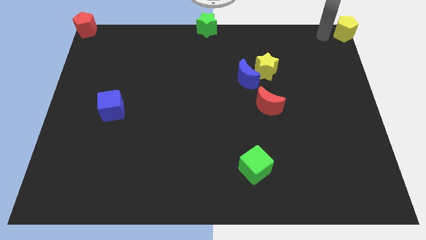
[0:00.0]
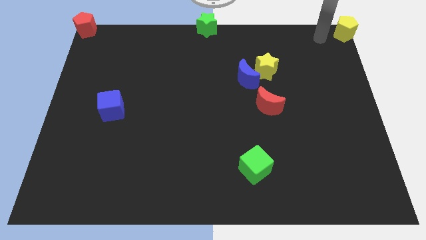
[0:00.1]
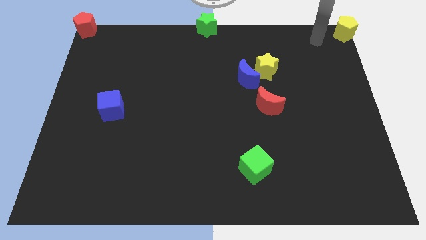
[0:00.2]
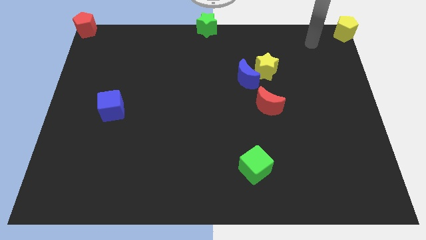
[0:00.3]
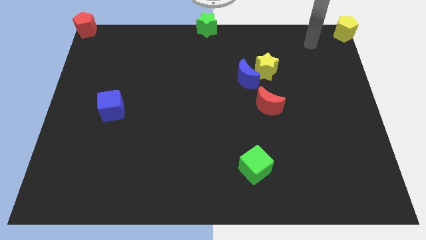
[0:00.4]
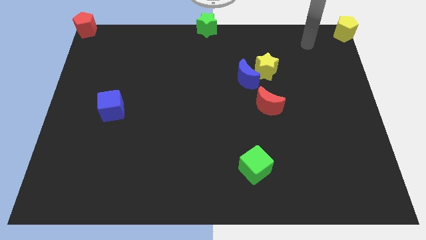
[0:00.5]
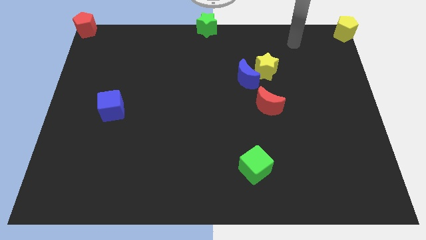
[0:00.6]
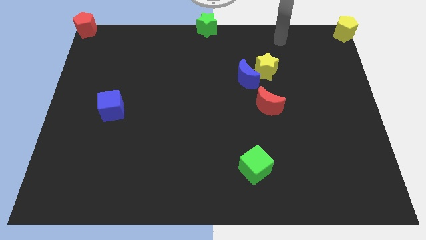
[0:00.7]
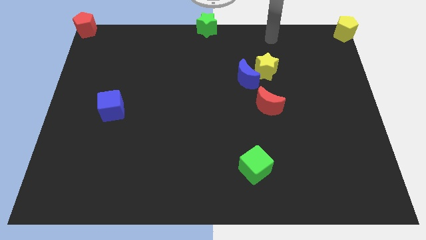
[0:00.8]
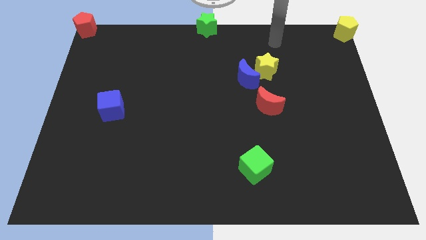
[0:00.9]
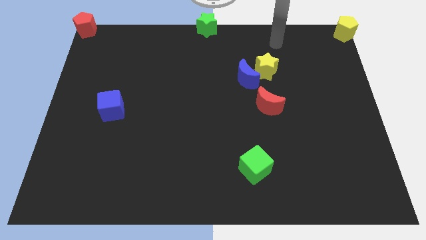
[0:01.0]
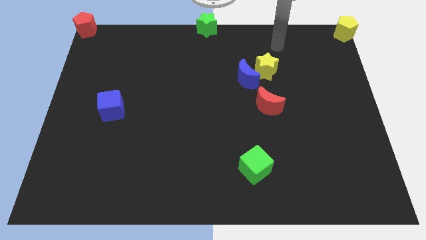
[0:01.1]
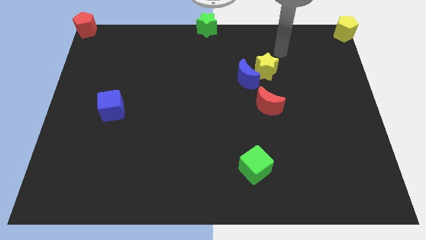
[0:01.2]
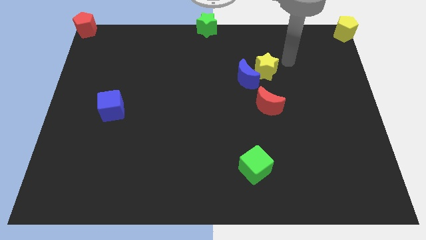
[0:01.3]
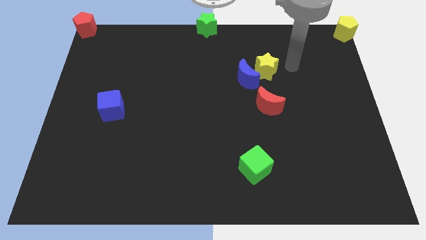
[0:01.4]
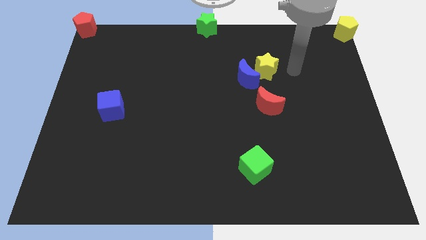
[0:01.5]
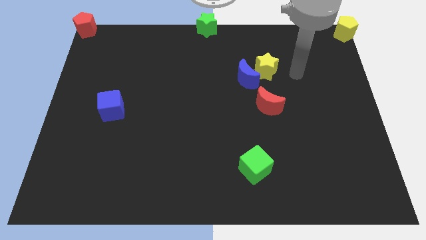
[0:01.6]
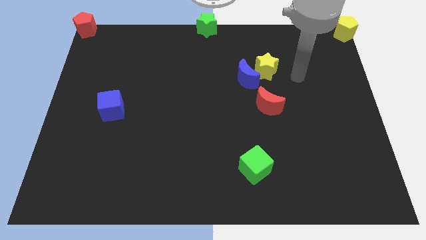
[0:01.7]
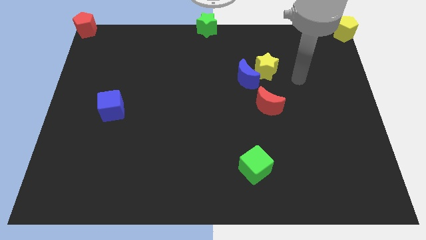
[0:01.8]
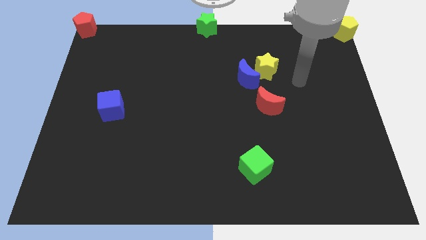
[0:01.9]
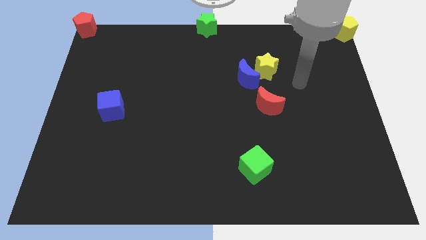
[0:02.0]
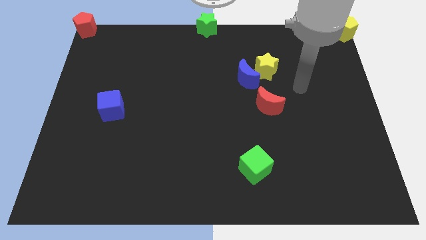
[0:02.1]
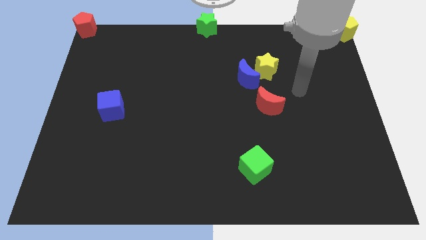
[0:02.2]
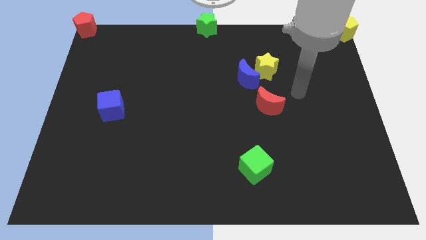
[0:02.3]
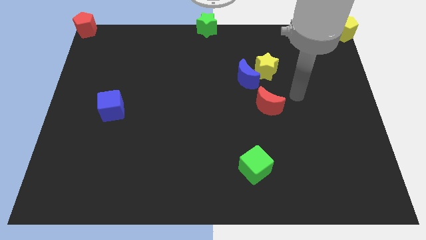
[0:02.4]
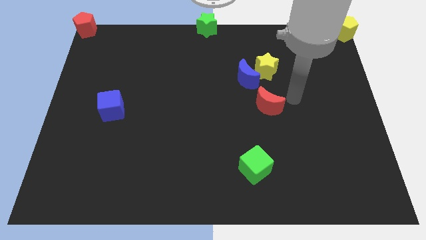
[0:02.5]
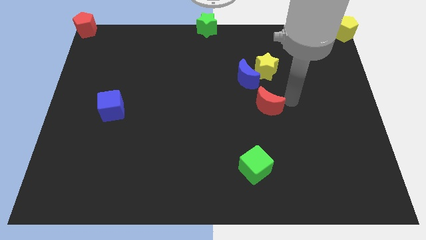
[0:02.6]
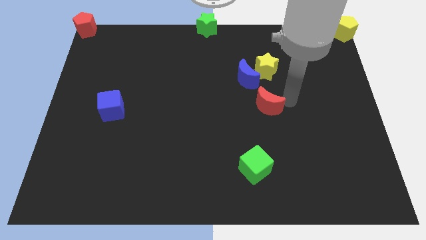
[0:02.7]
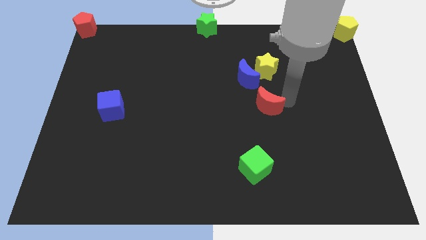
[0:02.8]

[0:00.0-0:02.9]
point your arm to the right side of red moon

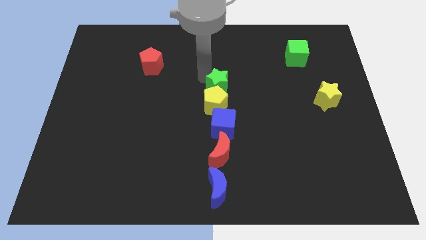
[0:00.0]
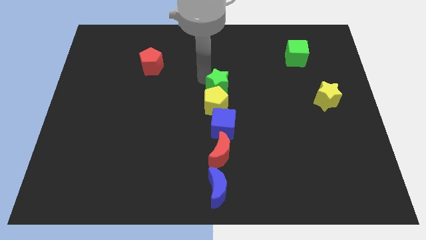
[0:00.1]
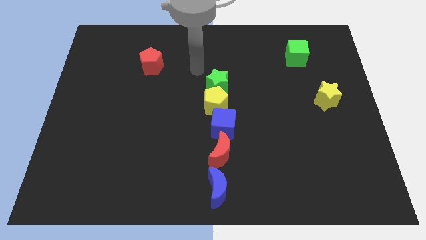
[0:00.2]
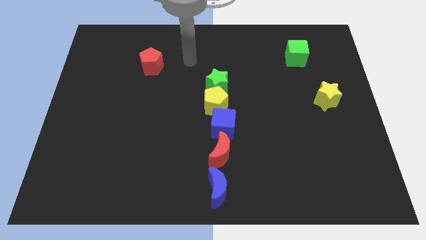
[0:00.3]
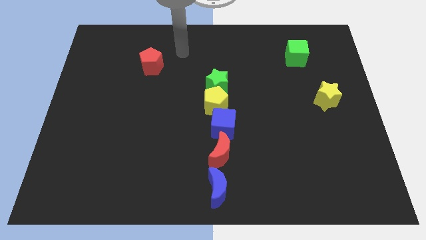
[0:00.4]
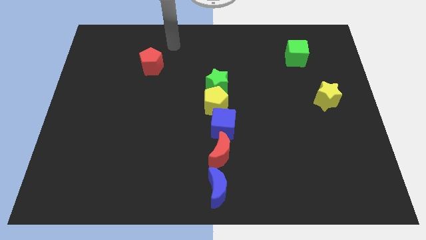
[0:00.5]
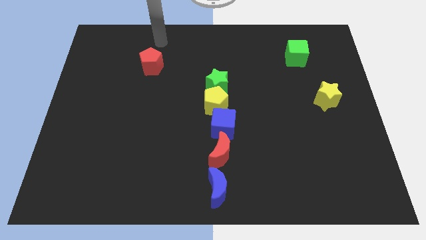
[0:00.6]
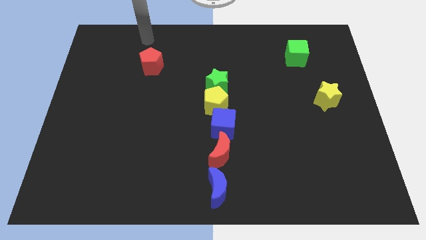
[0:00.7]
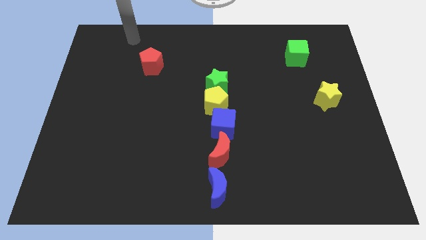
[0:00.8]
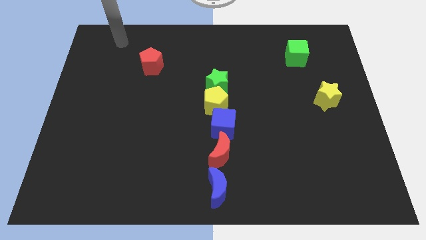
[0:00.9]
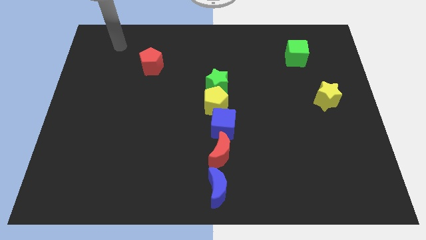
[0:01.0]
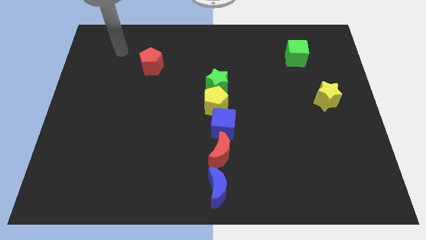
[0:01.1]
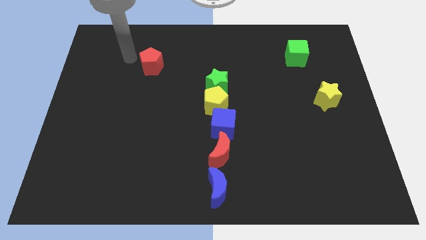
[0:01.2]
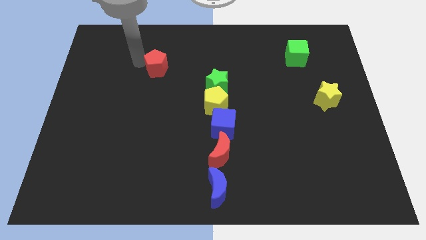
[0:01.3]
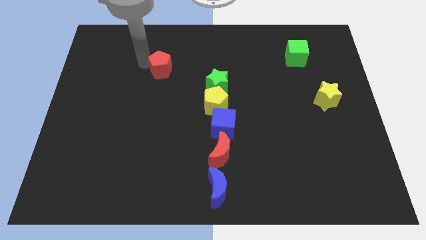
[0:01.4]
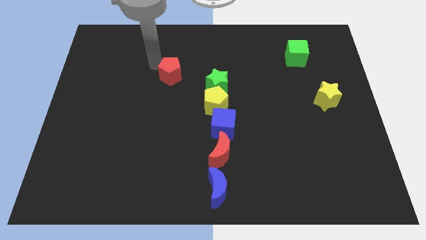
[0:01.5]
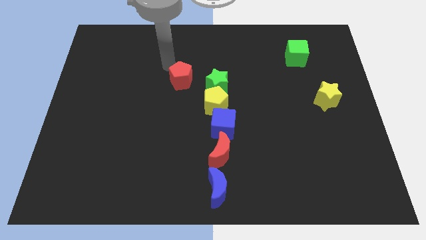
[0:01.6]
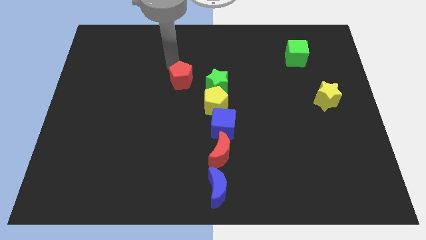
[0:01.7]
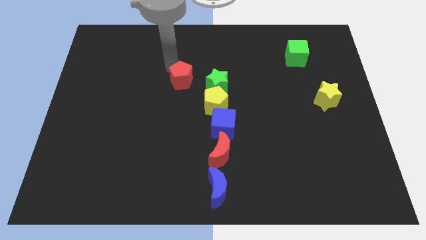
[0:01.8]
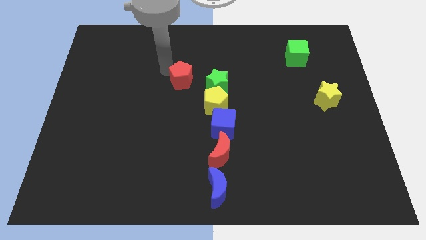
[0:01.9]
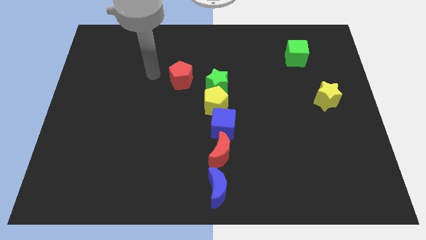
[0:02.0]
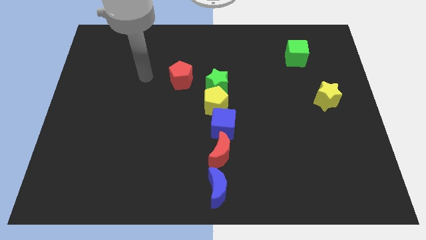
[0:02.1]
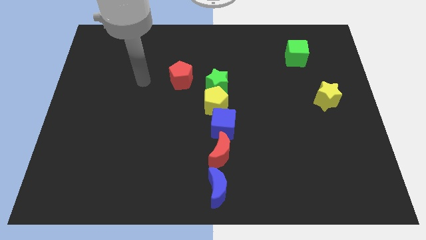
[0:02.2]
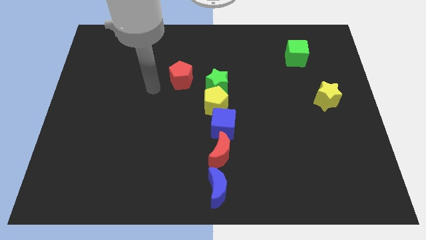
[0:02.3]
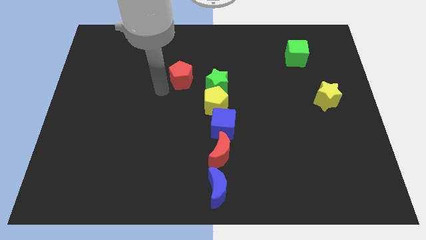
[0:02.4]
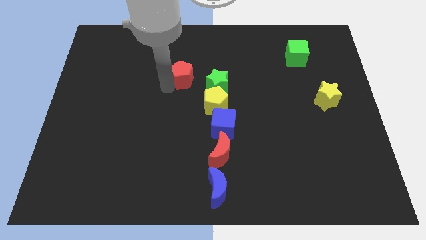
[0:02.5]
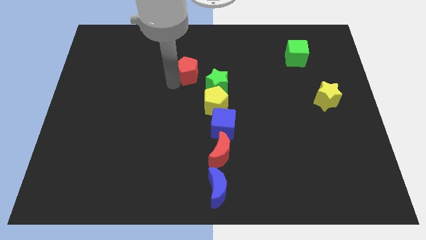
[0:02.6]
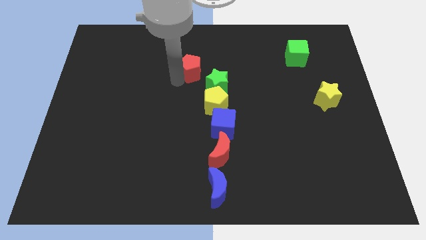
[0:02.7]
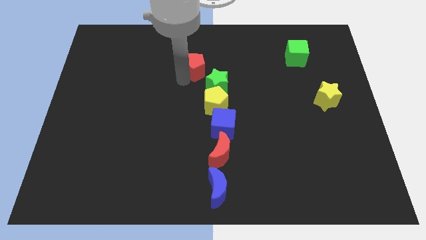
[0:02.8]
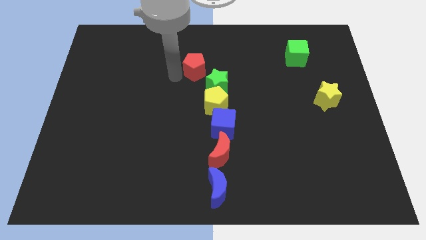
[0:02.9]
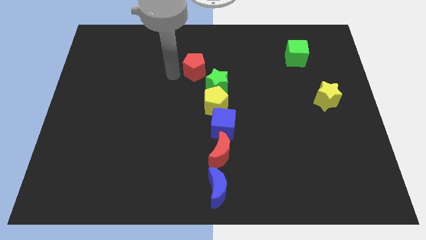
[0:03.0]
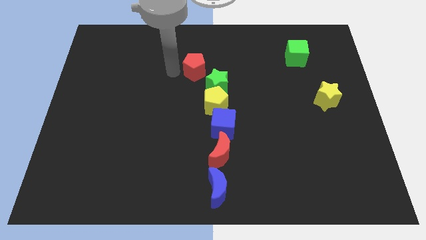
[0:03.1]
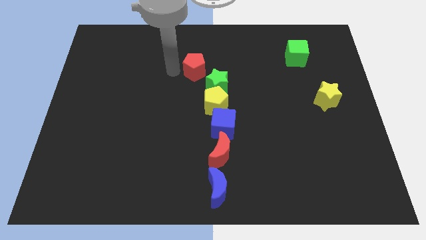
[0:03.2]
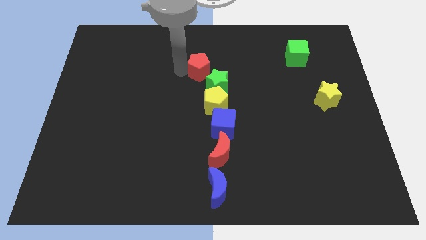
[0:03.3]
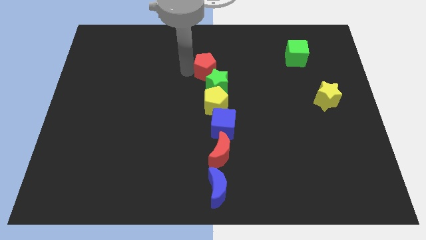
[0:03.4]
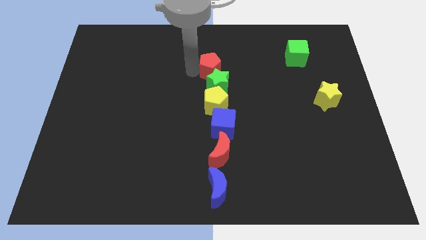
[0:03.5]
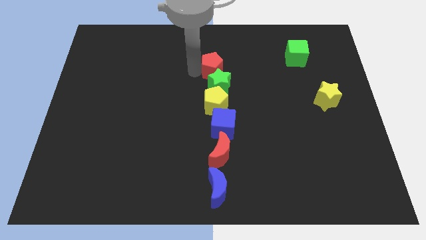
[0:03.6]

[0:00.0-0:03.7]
push the red pentagon towards the green star

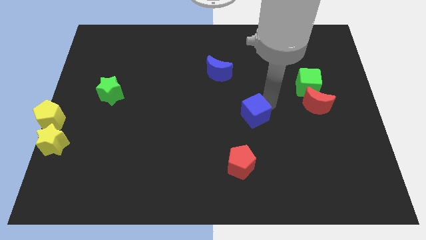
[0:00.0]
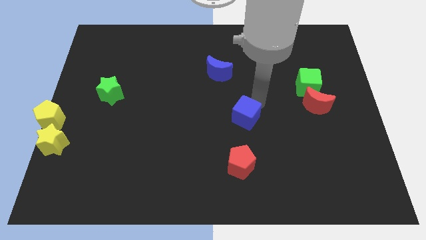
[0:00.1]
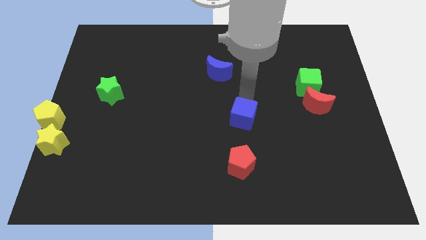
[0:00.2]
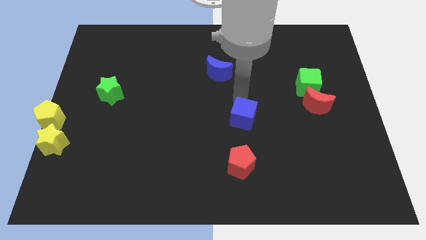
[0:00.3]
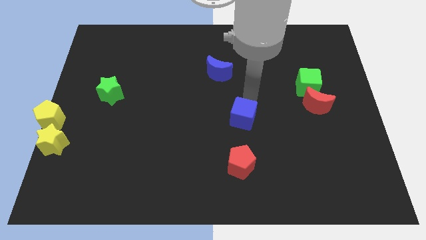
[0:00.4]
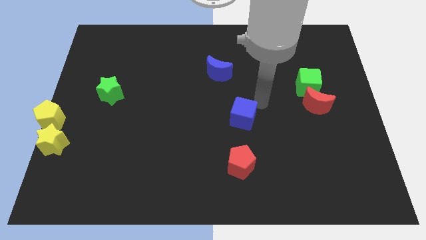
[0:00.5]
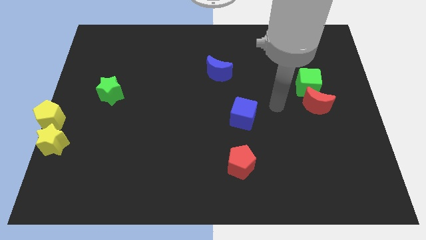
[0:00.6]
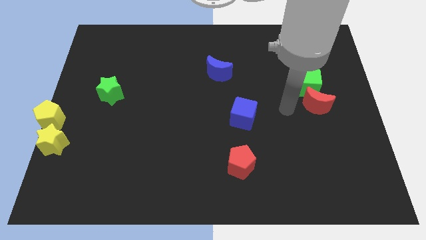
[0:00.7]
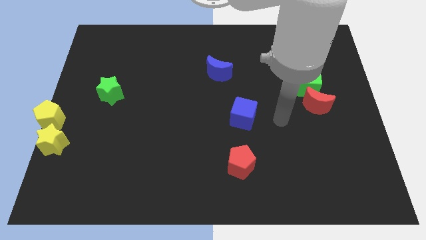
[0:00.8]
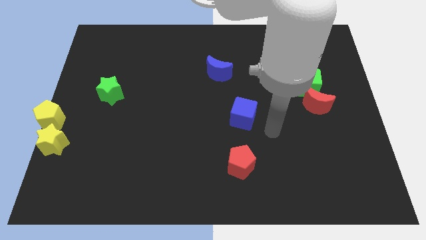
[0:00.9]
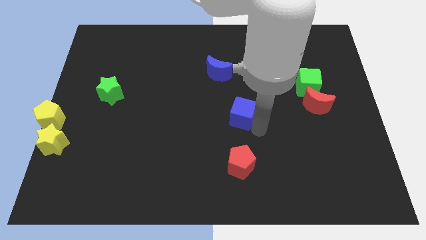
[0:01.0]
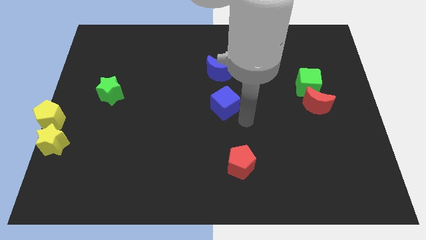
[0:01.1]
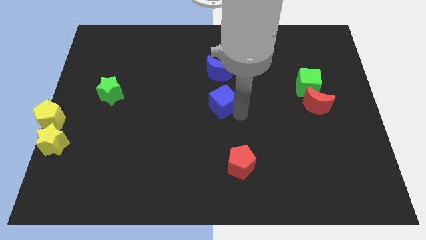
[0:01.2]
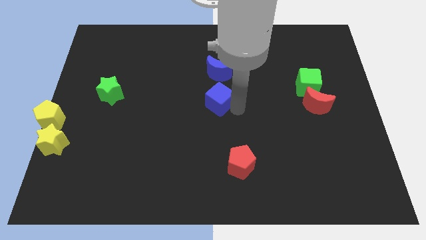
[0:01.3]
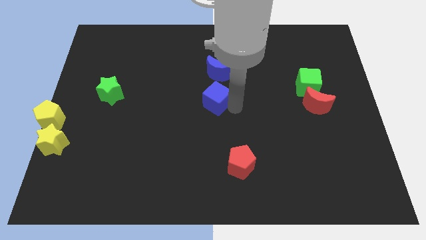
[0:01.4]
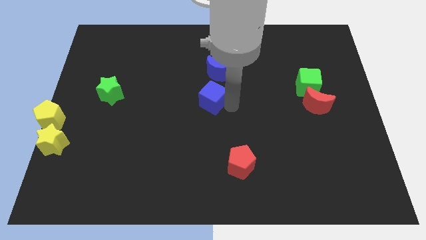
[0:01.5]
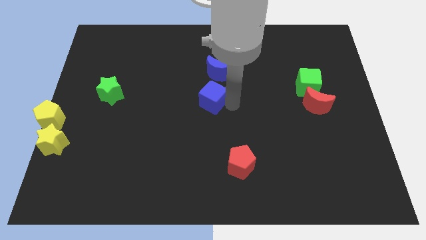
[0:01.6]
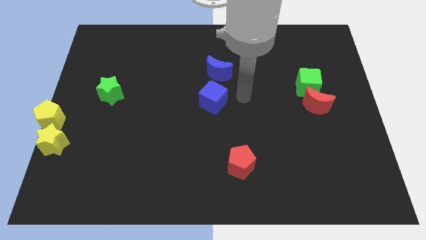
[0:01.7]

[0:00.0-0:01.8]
slightly push blue cube below to the below crescent

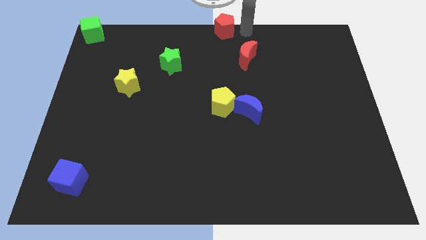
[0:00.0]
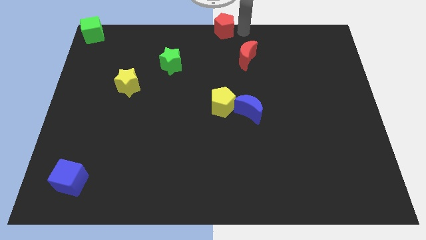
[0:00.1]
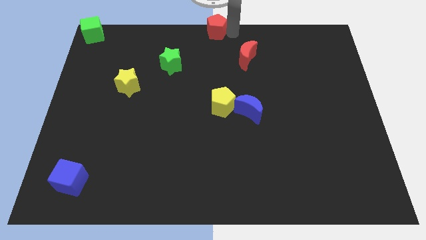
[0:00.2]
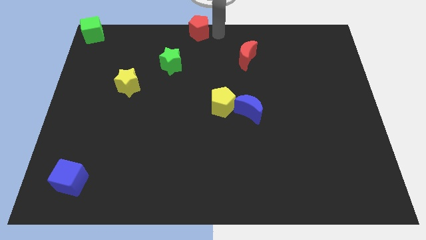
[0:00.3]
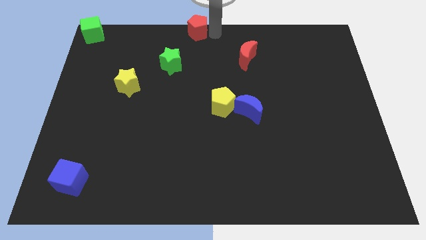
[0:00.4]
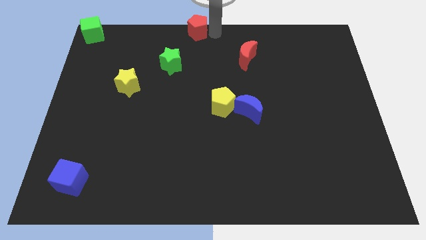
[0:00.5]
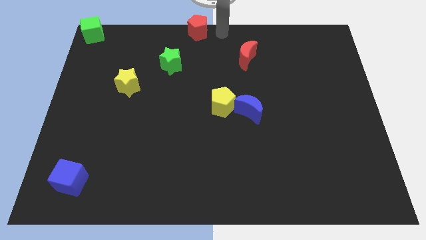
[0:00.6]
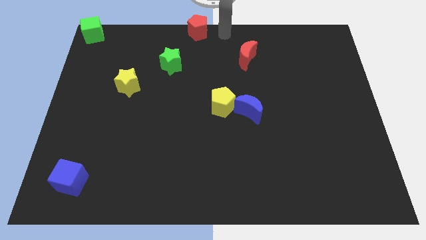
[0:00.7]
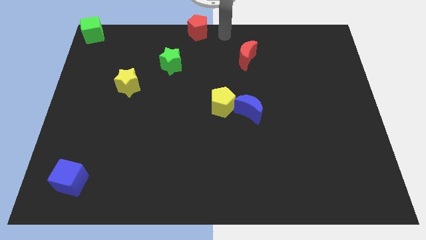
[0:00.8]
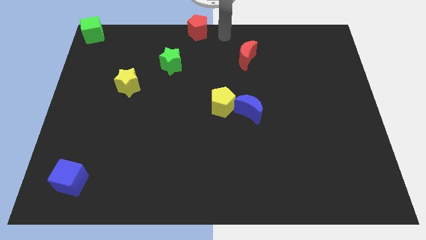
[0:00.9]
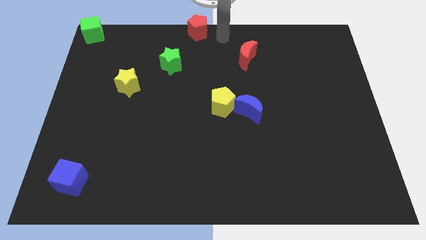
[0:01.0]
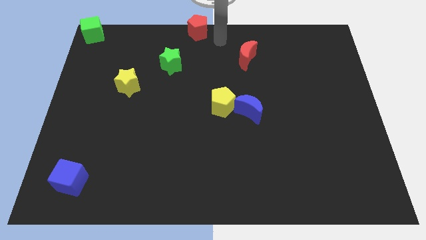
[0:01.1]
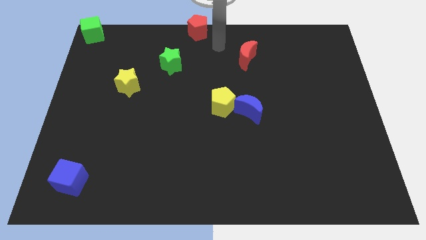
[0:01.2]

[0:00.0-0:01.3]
push the red pentagon towards the center of the board
